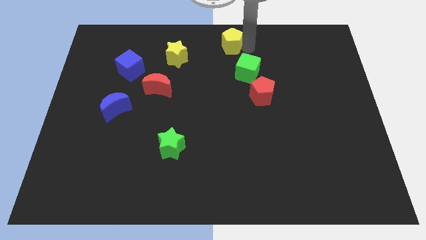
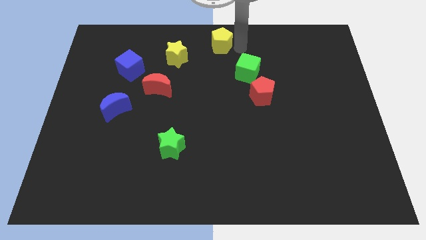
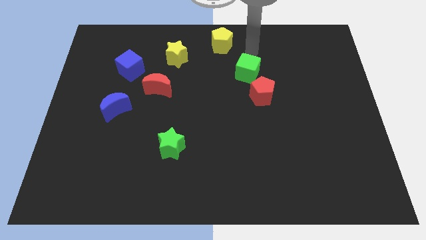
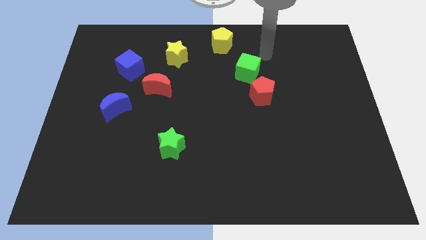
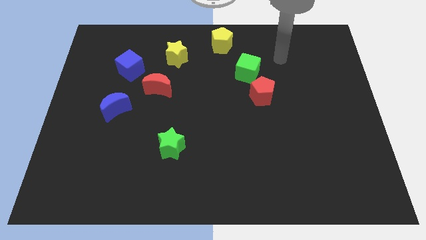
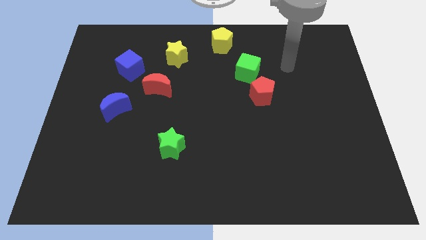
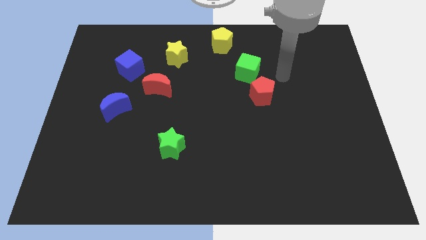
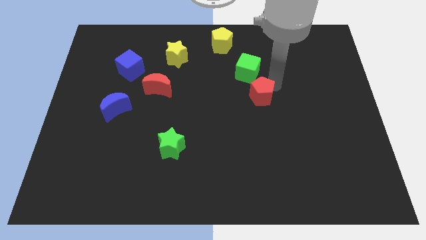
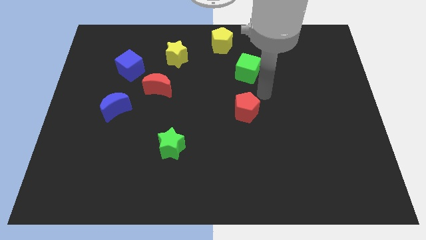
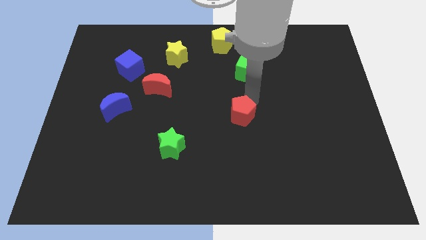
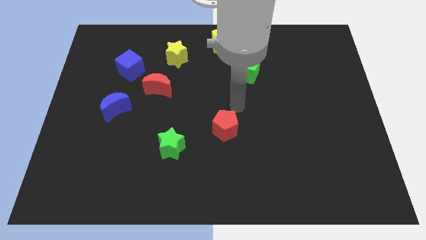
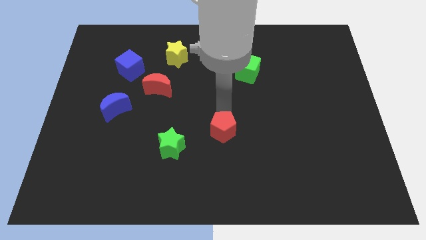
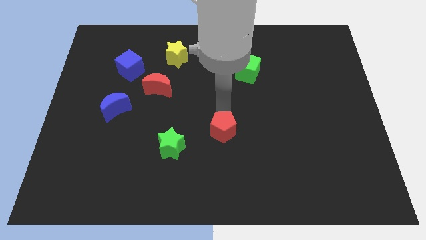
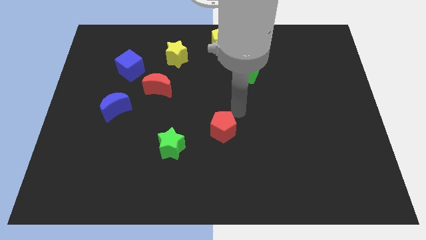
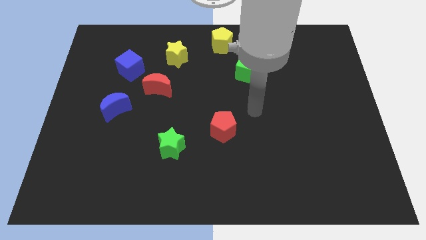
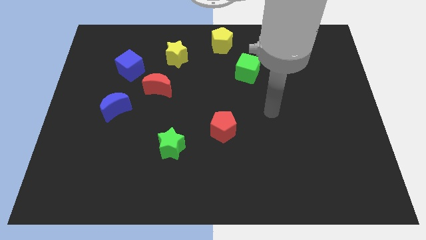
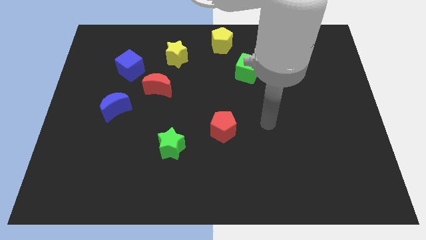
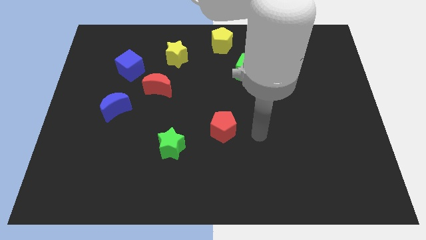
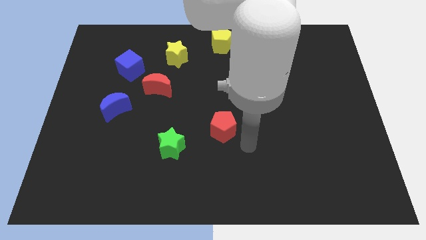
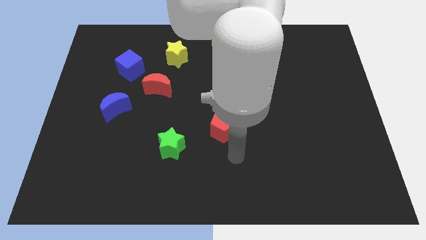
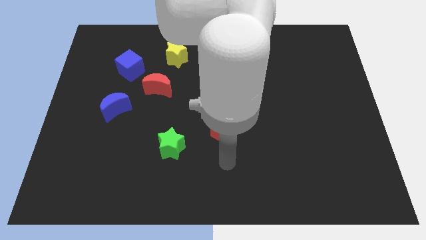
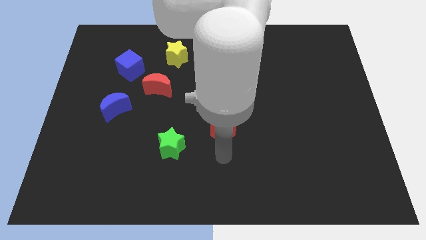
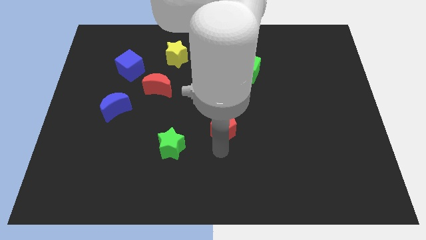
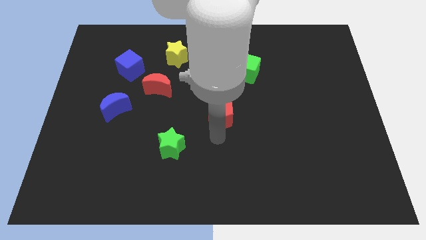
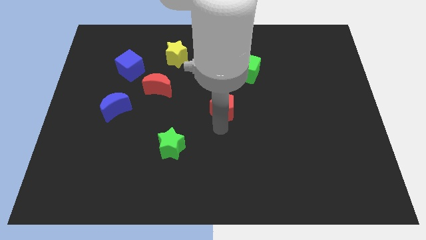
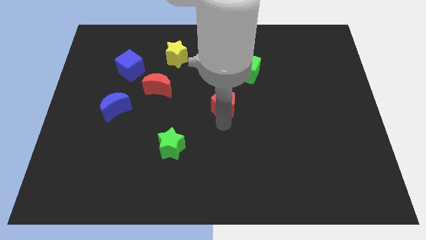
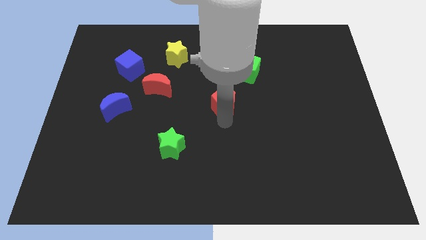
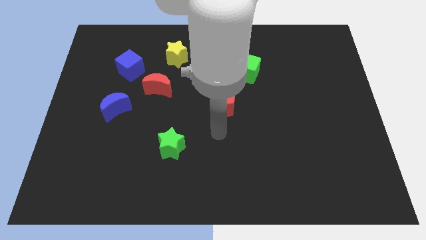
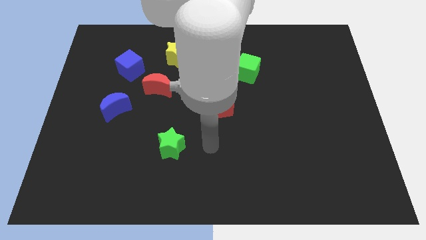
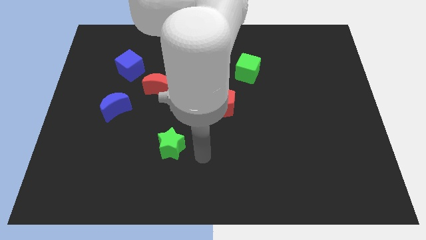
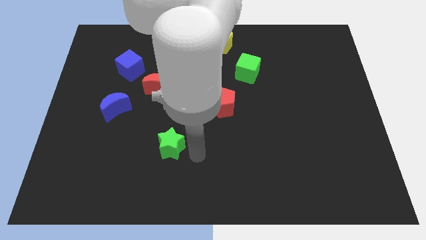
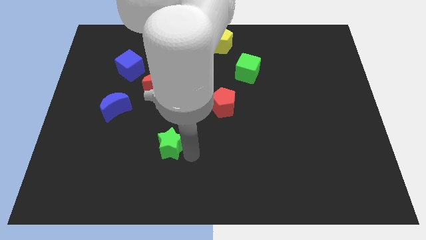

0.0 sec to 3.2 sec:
push the red pentagon to the bottom of the green cube

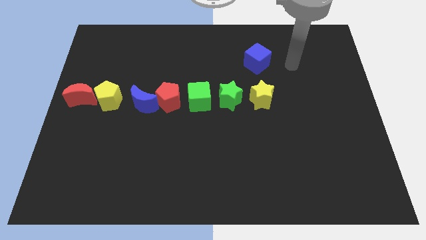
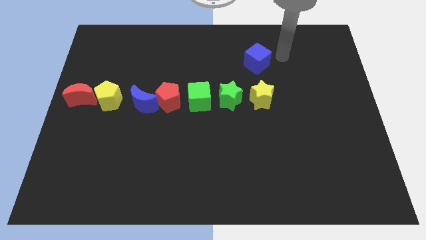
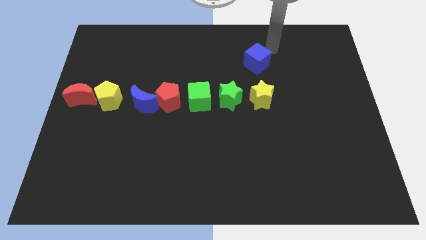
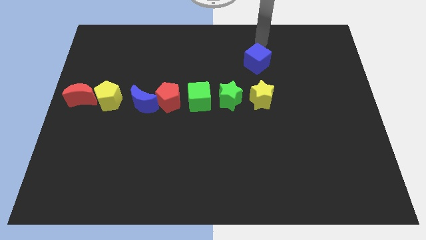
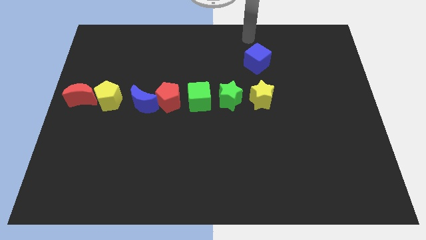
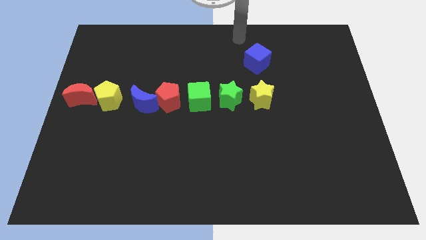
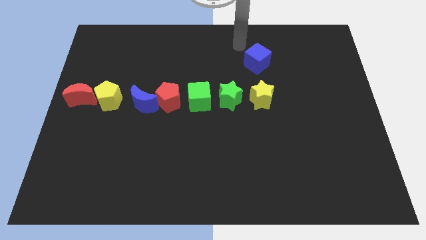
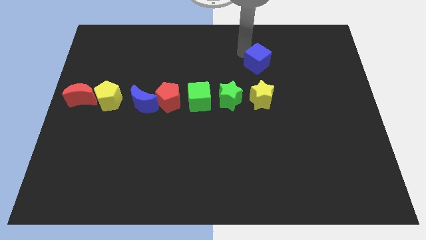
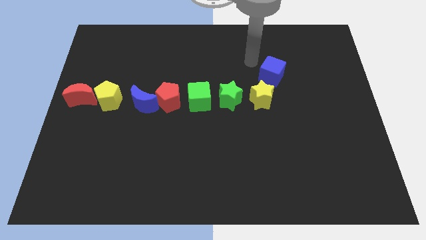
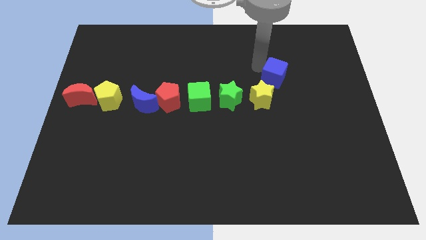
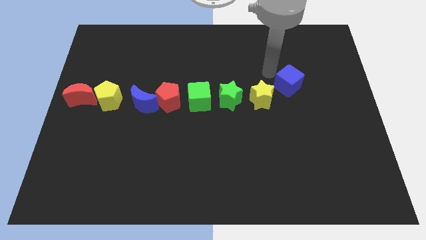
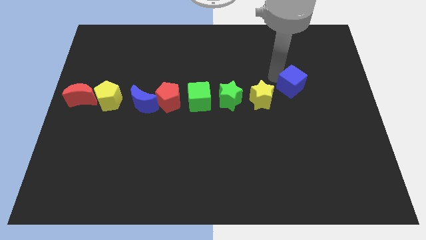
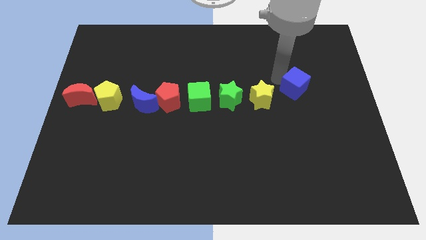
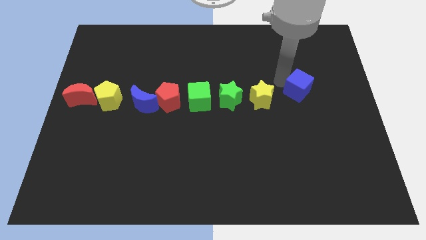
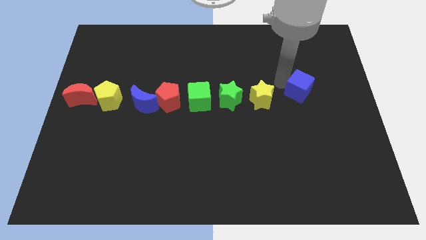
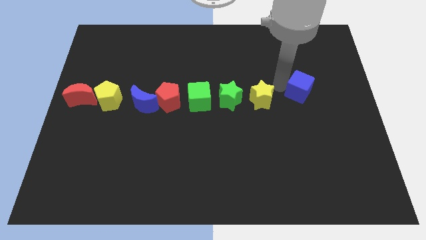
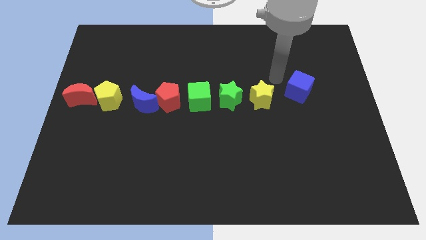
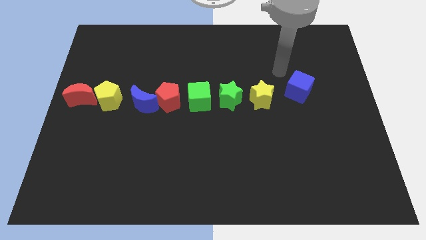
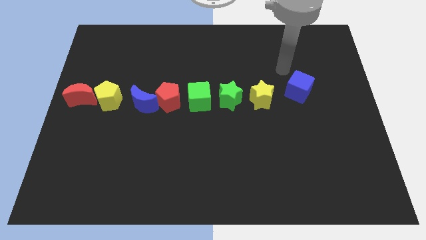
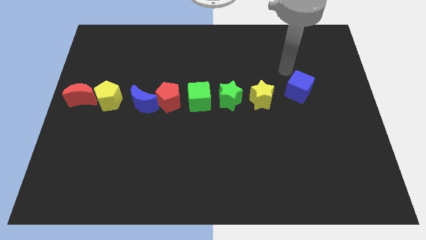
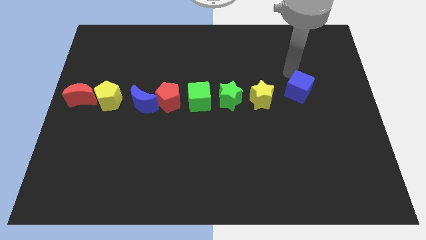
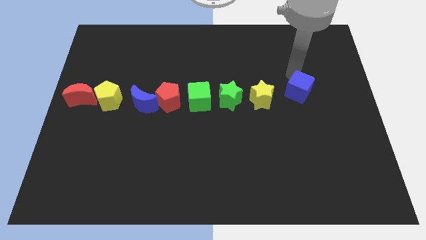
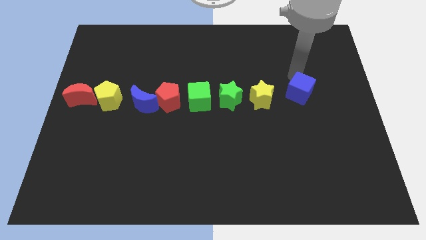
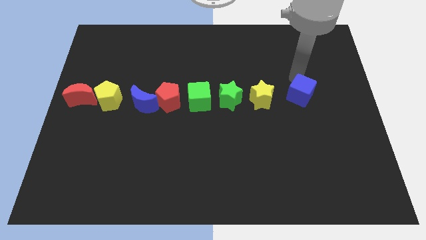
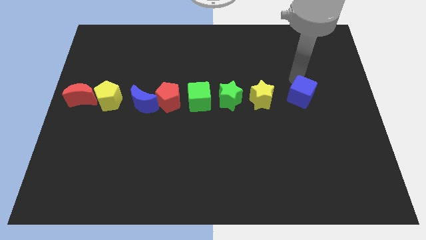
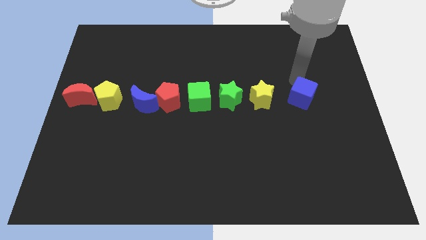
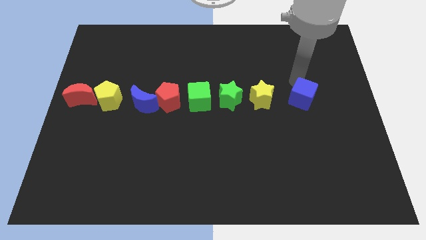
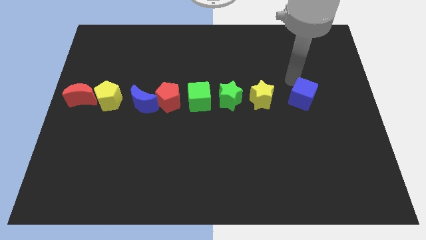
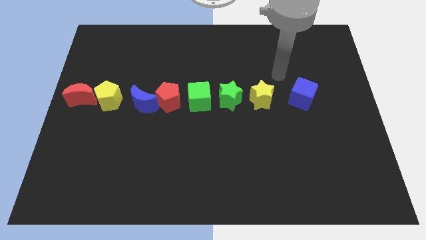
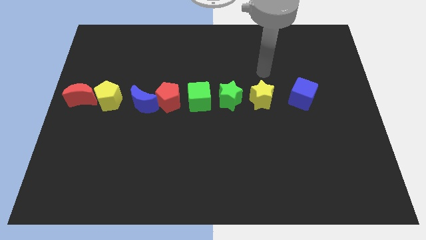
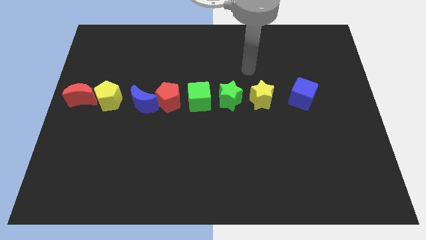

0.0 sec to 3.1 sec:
push the blue cube to the right side of the yellow star

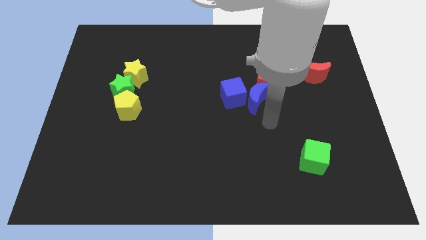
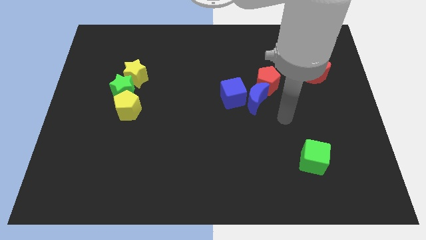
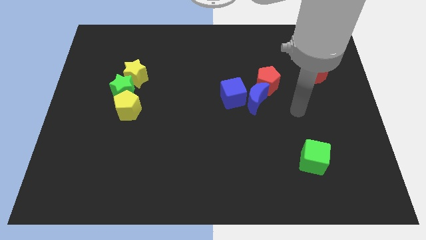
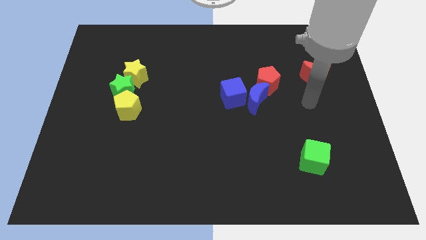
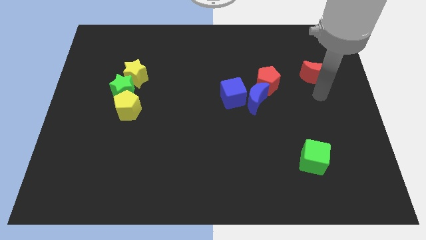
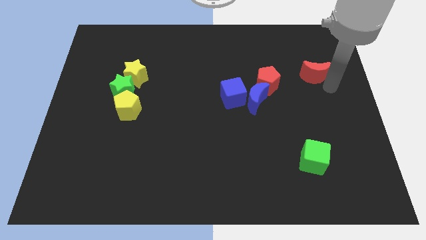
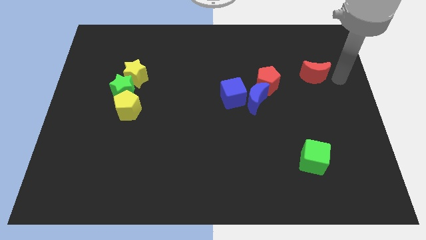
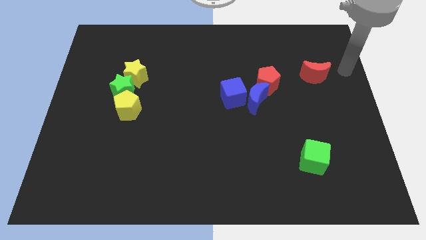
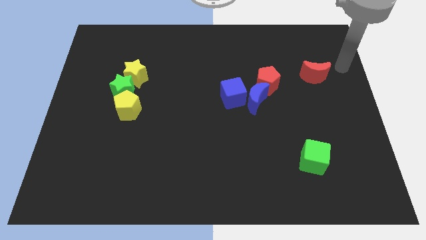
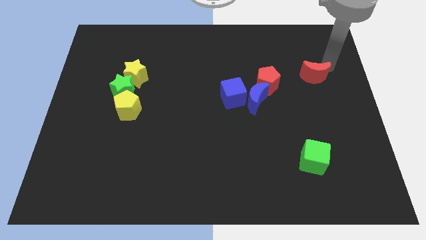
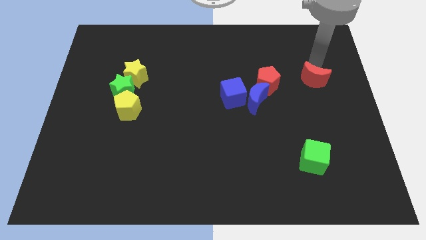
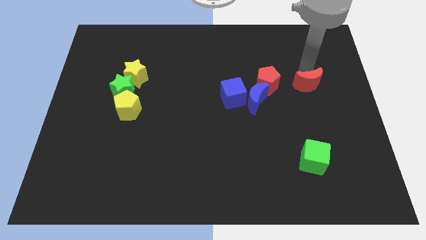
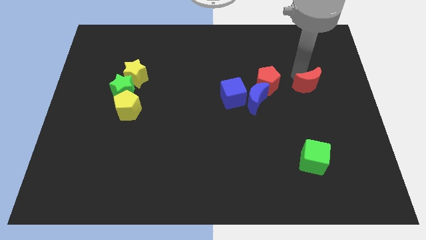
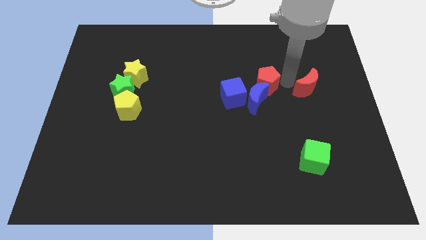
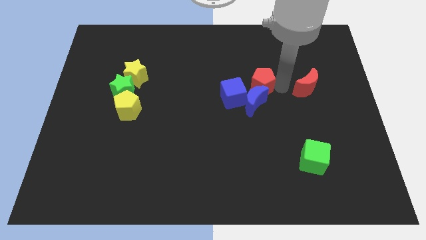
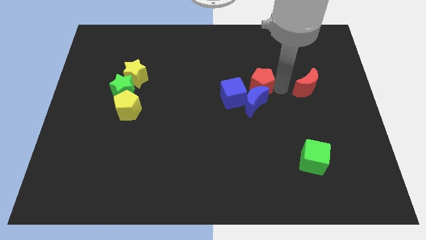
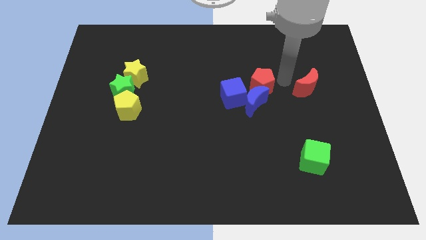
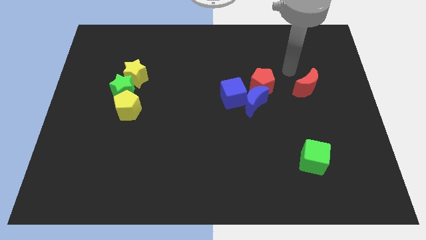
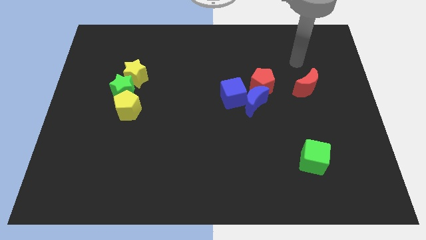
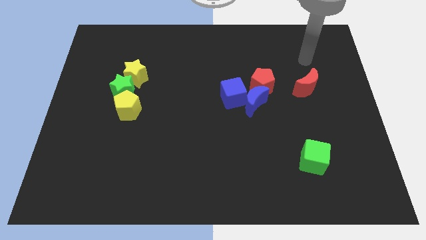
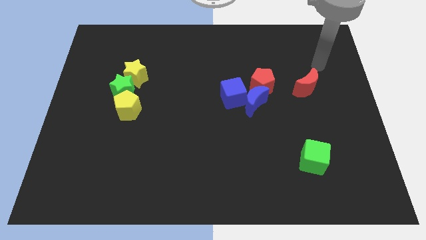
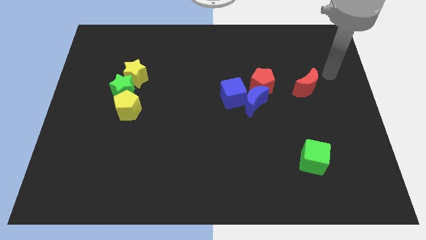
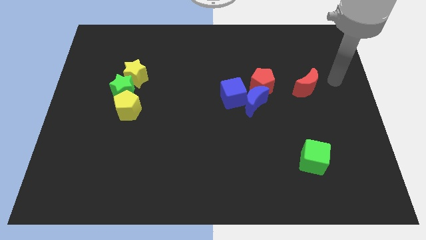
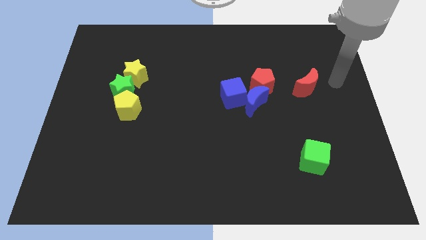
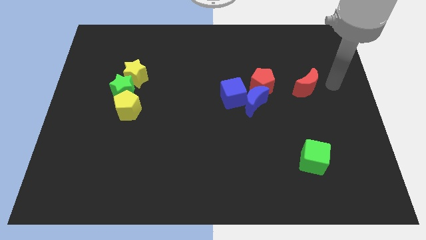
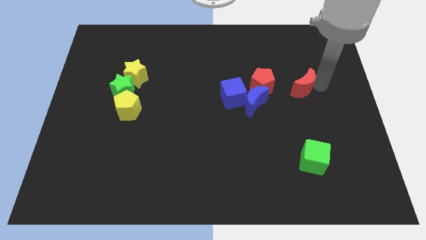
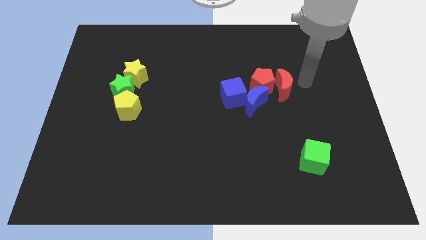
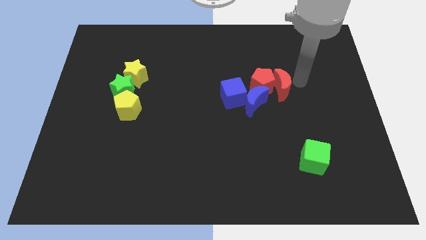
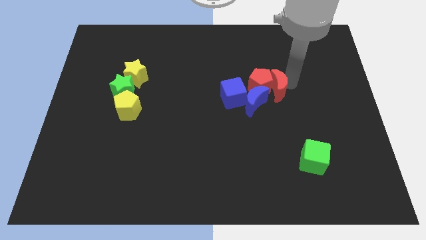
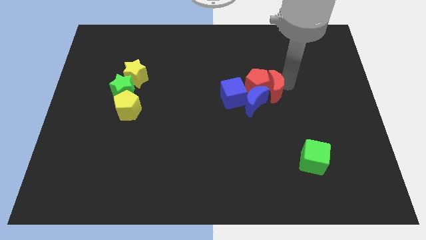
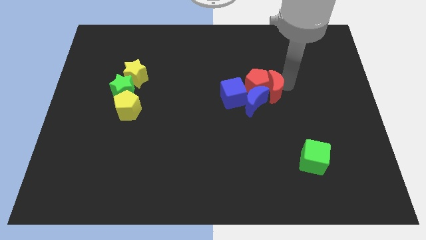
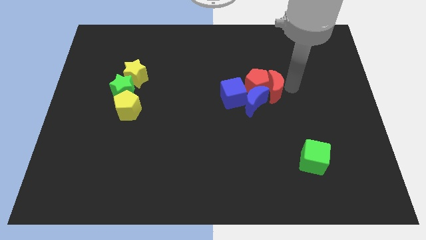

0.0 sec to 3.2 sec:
move the red moon into the red pentagon
